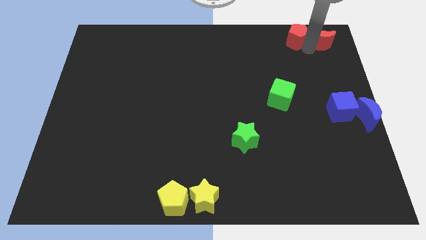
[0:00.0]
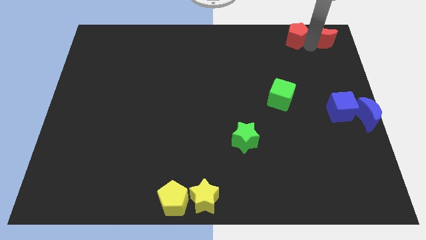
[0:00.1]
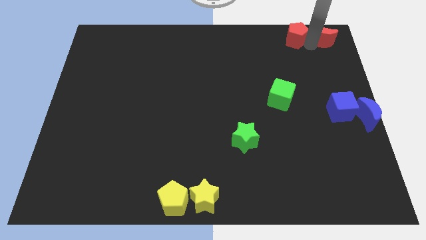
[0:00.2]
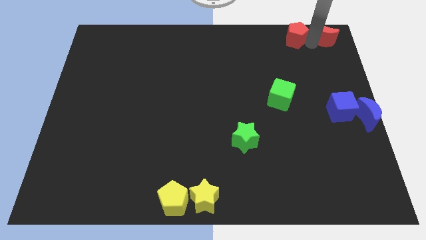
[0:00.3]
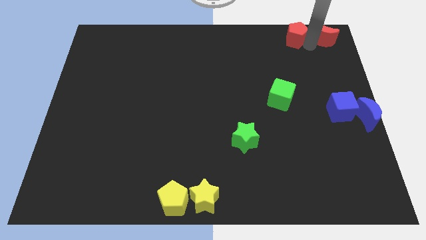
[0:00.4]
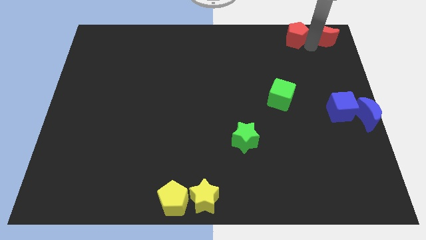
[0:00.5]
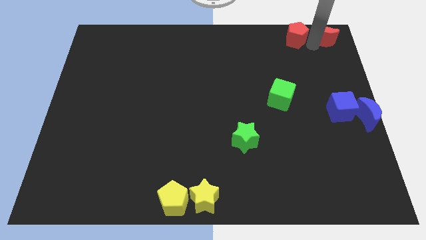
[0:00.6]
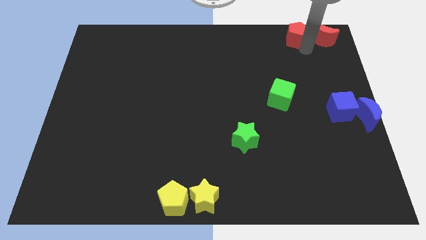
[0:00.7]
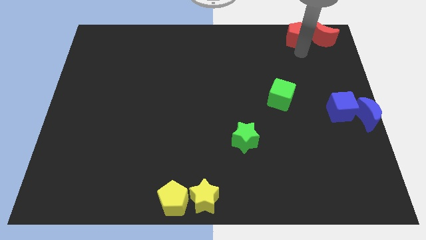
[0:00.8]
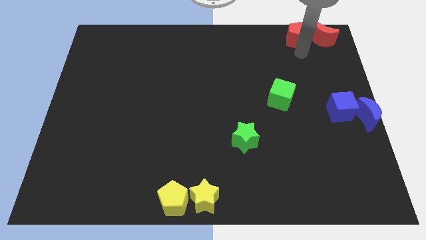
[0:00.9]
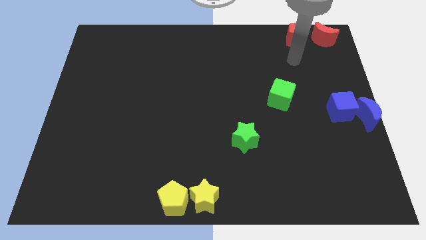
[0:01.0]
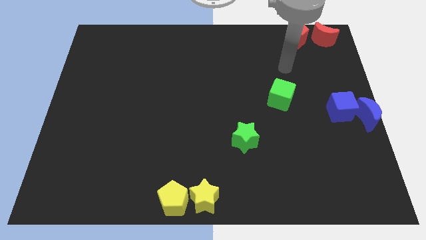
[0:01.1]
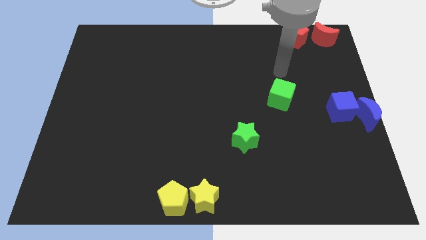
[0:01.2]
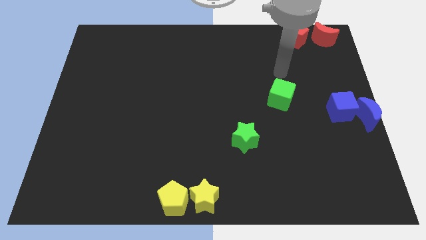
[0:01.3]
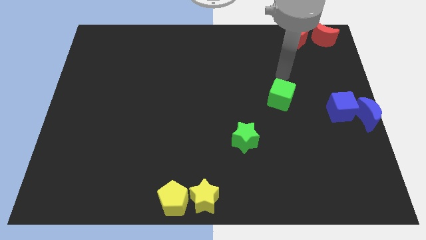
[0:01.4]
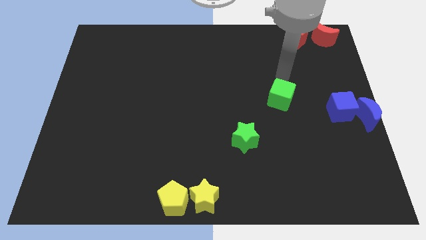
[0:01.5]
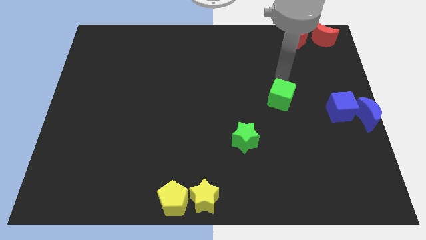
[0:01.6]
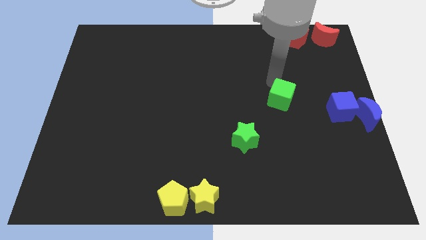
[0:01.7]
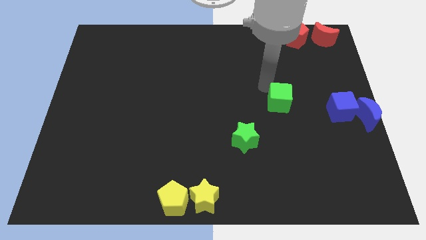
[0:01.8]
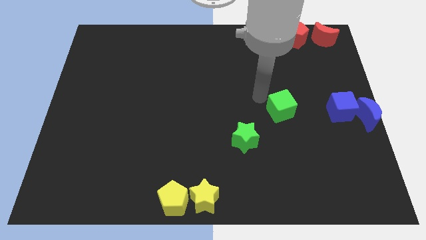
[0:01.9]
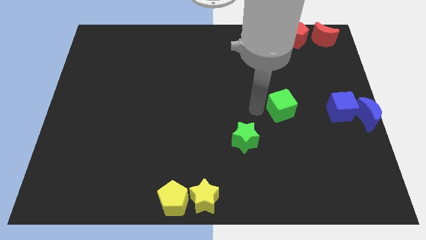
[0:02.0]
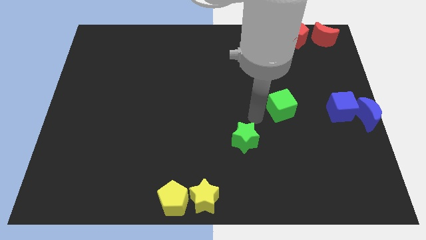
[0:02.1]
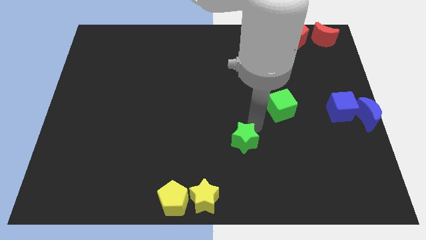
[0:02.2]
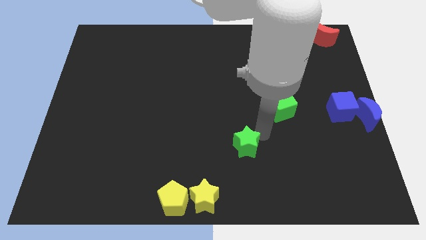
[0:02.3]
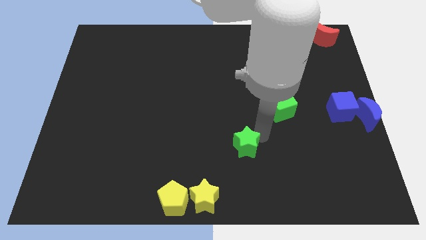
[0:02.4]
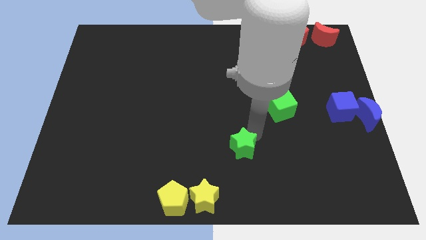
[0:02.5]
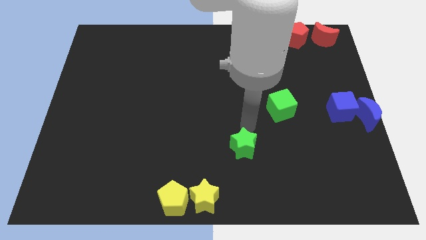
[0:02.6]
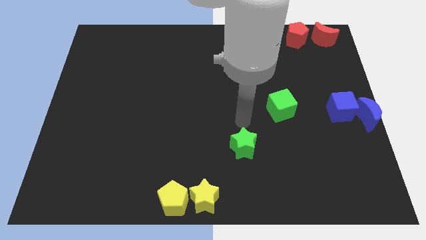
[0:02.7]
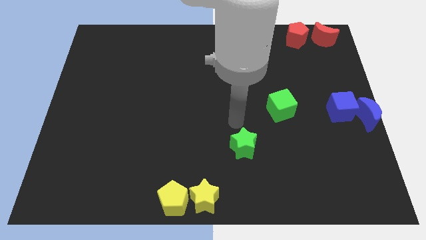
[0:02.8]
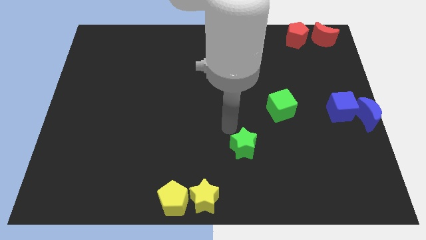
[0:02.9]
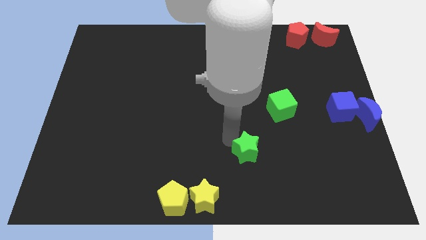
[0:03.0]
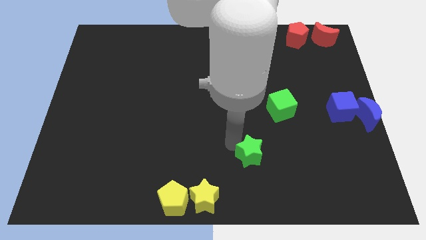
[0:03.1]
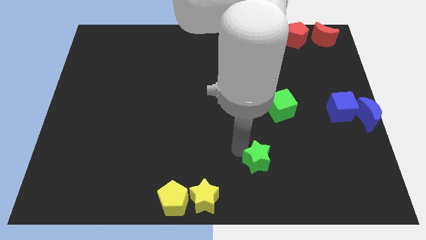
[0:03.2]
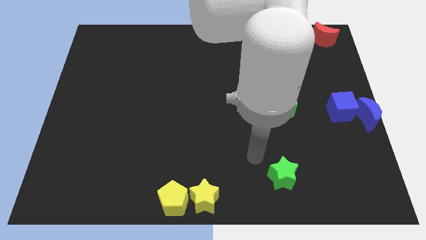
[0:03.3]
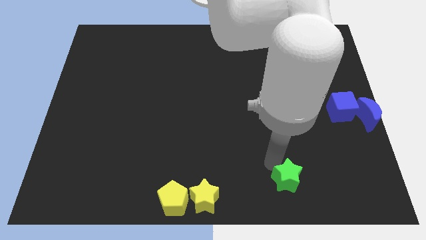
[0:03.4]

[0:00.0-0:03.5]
slightly tap the green cube towards the bottom side

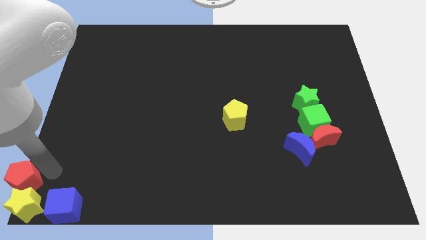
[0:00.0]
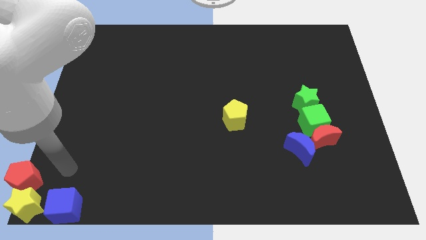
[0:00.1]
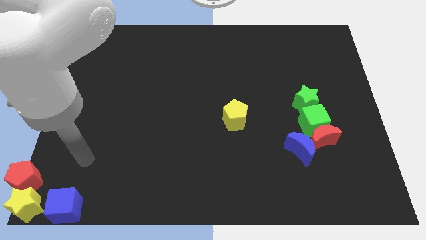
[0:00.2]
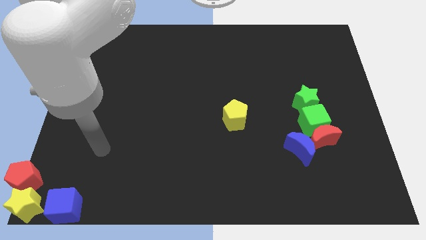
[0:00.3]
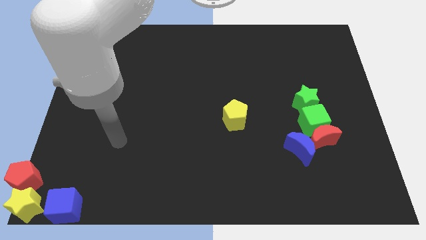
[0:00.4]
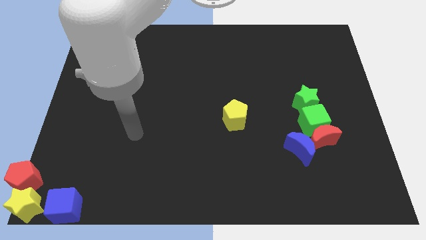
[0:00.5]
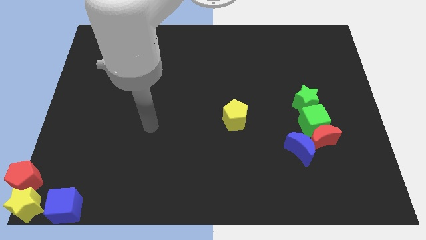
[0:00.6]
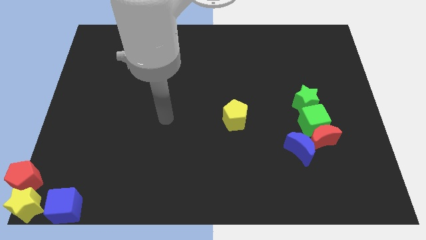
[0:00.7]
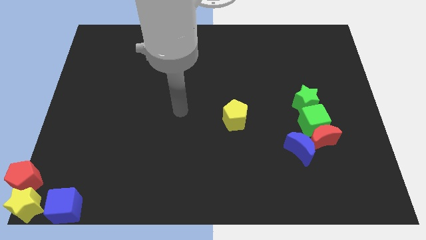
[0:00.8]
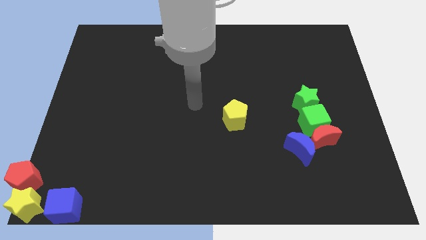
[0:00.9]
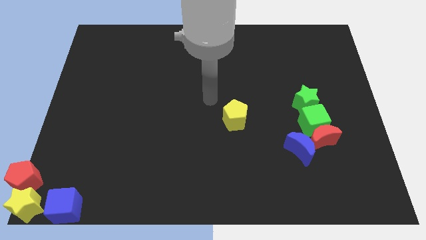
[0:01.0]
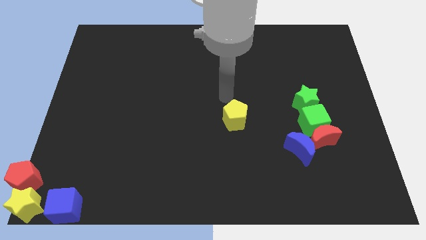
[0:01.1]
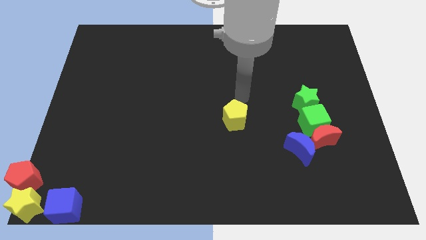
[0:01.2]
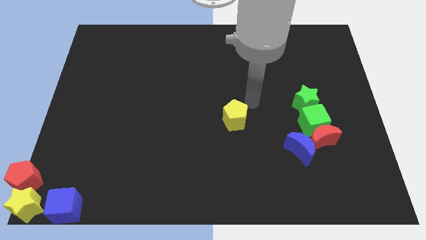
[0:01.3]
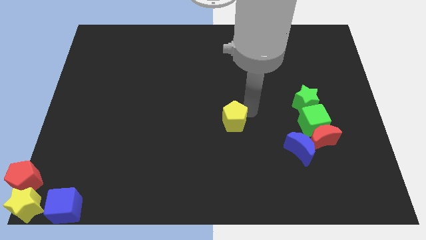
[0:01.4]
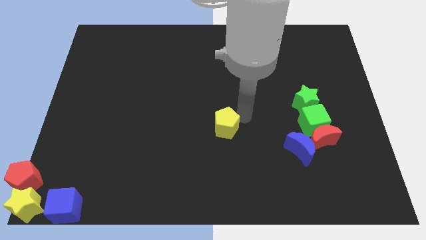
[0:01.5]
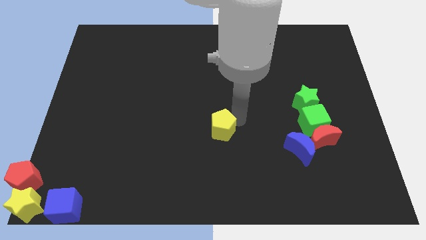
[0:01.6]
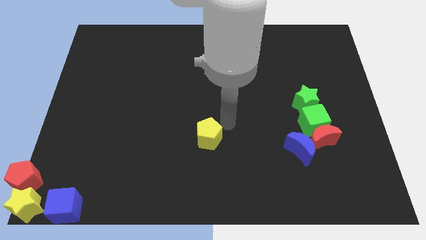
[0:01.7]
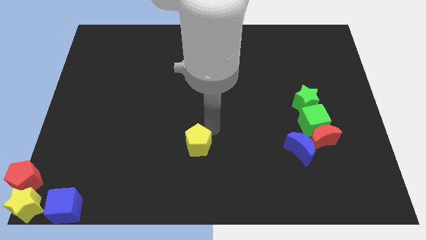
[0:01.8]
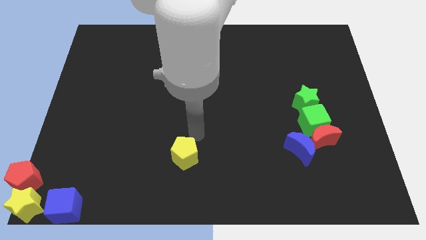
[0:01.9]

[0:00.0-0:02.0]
move the yellow pentagon to the center of the board

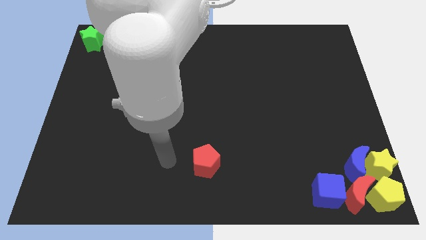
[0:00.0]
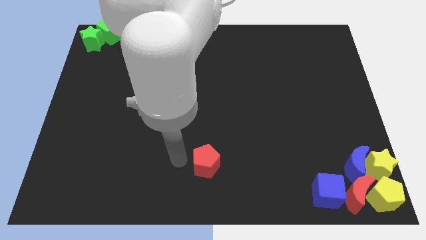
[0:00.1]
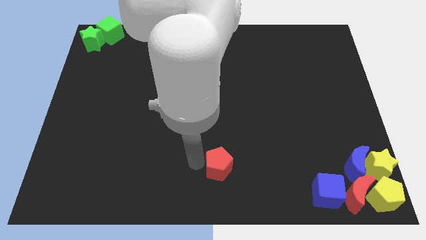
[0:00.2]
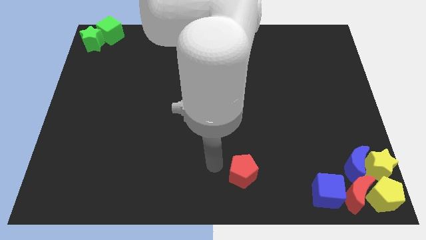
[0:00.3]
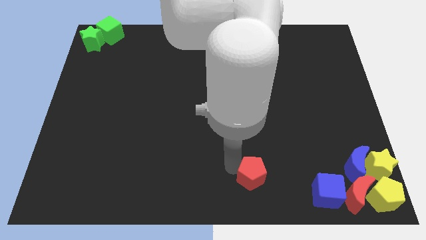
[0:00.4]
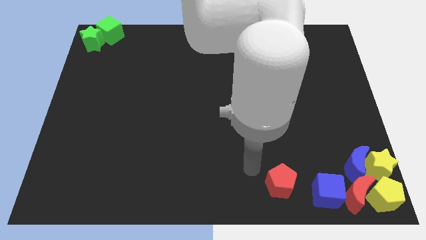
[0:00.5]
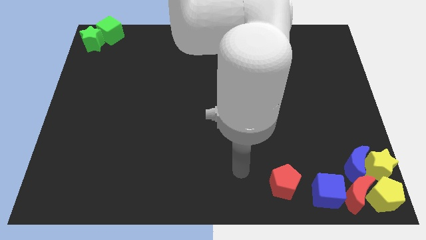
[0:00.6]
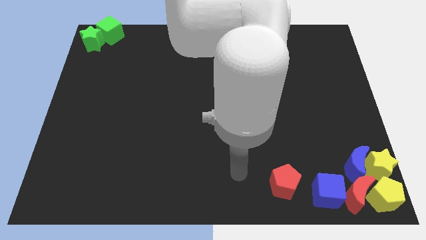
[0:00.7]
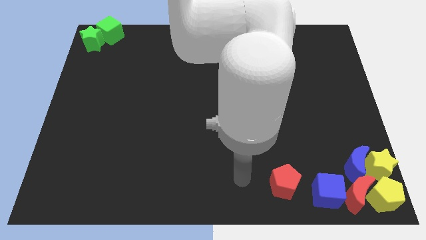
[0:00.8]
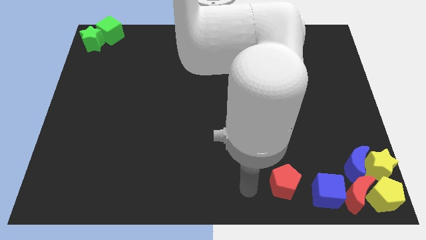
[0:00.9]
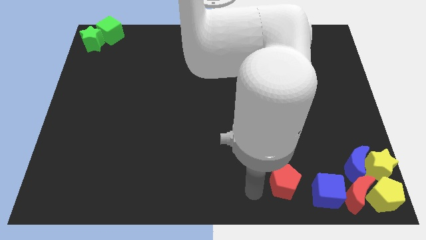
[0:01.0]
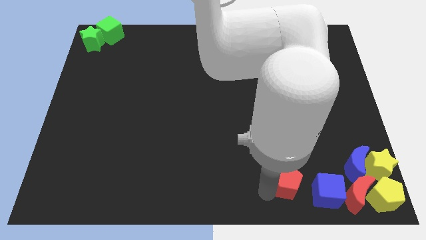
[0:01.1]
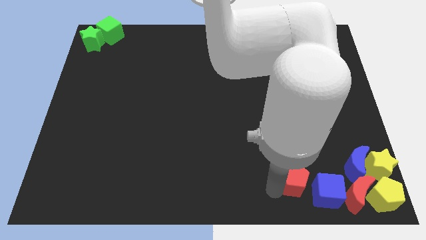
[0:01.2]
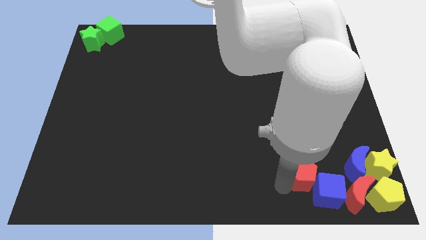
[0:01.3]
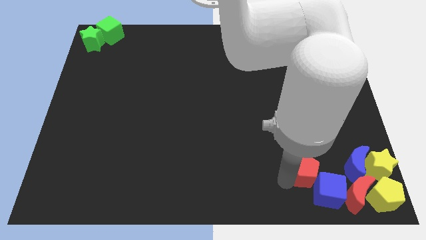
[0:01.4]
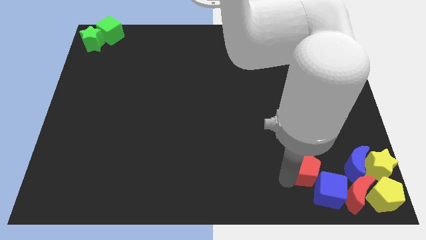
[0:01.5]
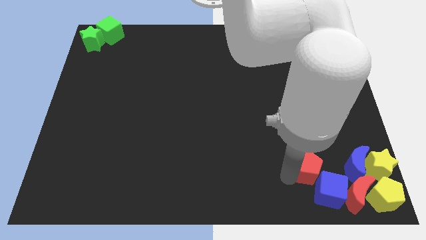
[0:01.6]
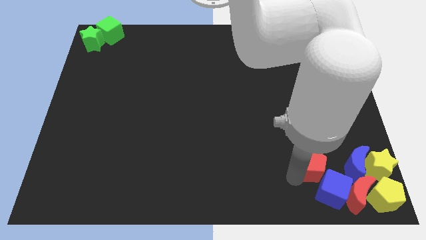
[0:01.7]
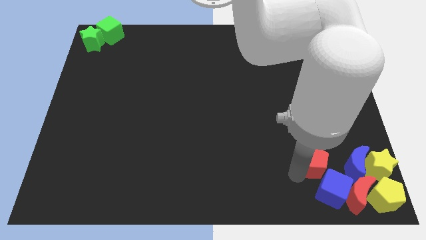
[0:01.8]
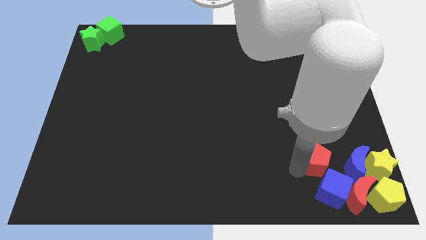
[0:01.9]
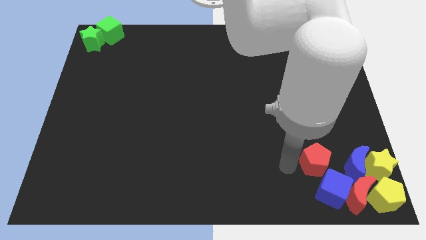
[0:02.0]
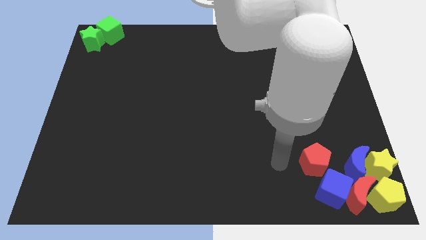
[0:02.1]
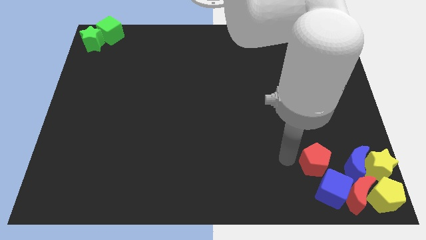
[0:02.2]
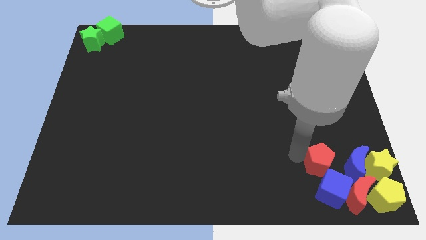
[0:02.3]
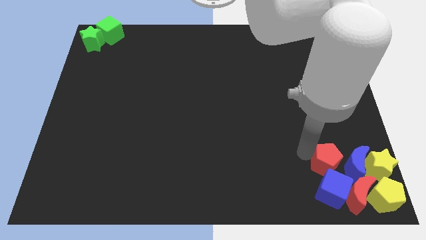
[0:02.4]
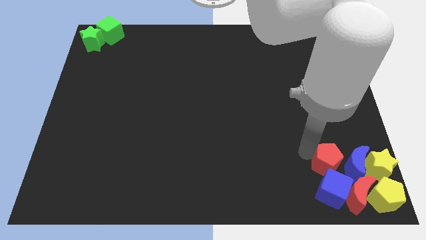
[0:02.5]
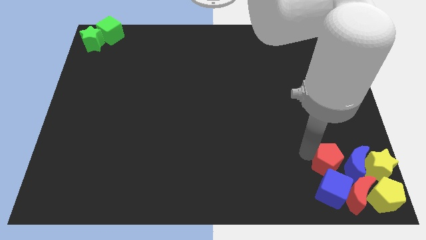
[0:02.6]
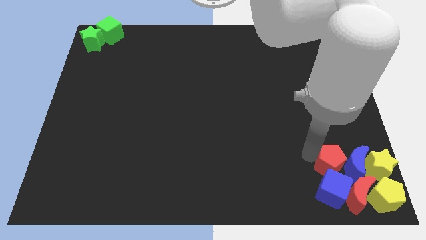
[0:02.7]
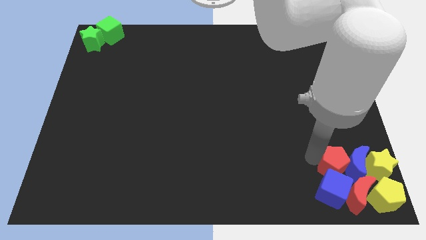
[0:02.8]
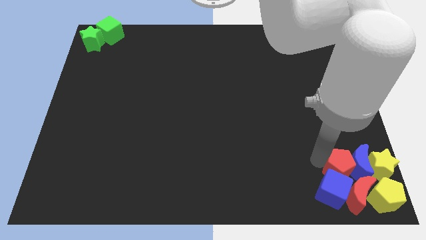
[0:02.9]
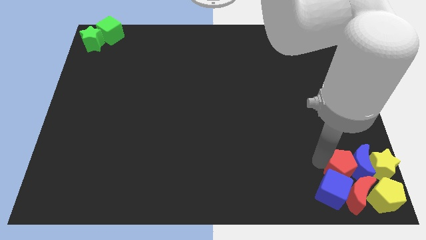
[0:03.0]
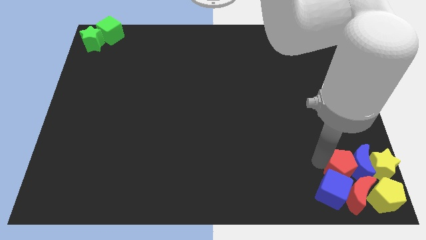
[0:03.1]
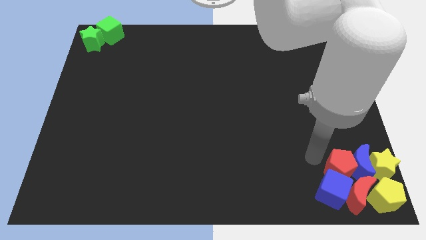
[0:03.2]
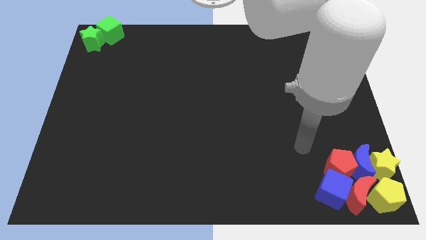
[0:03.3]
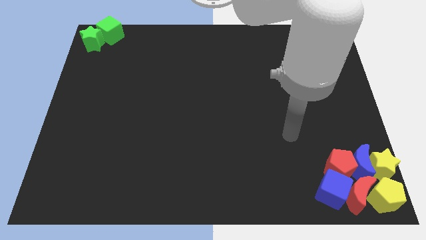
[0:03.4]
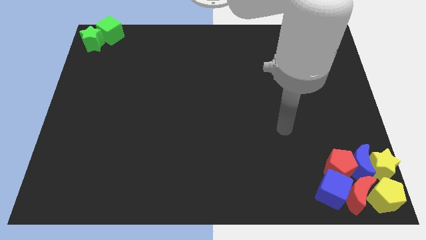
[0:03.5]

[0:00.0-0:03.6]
move the red pentagon to the top side of the blue cube
